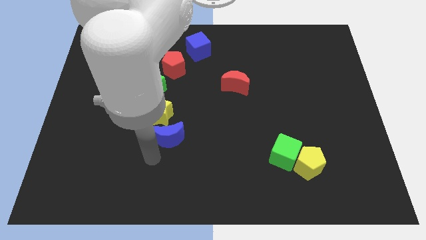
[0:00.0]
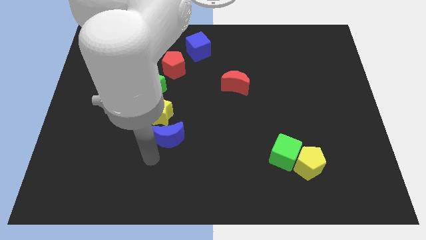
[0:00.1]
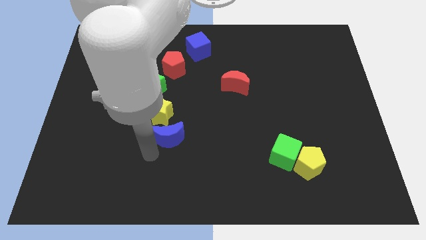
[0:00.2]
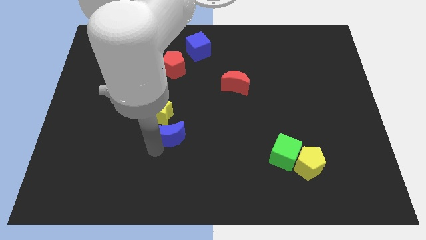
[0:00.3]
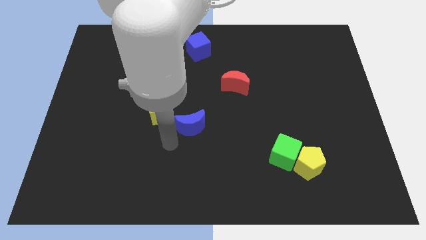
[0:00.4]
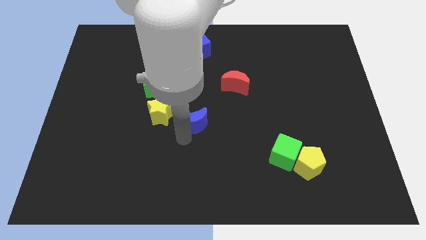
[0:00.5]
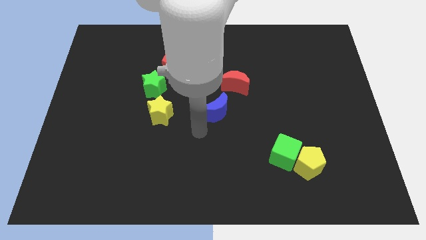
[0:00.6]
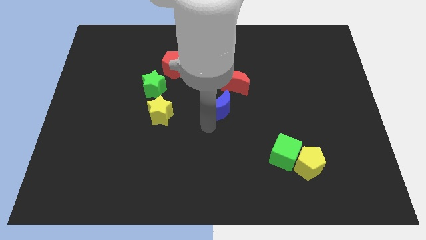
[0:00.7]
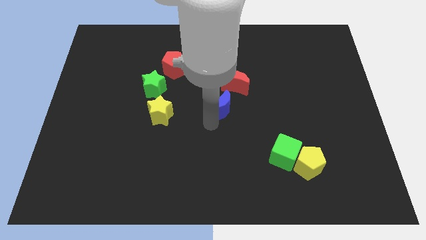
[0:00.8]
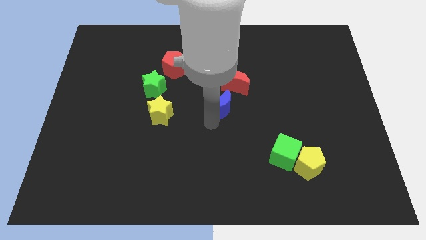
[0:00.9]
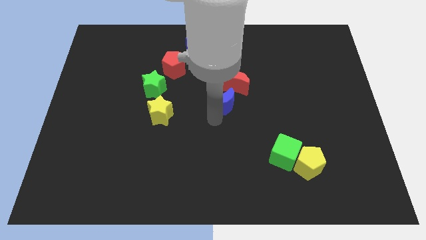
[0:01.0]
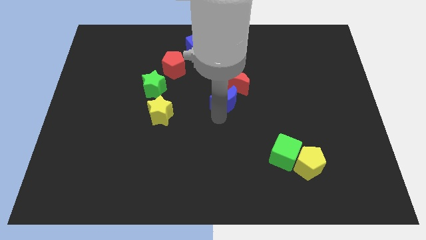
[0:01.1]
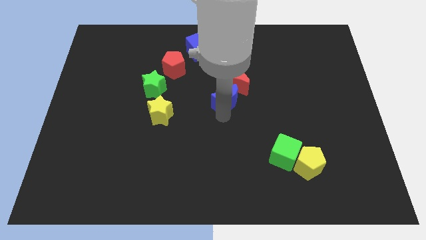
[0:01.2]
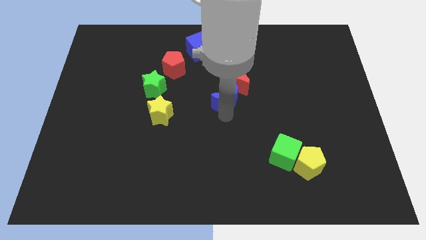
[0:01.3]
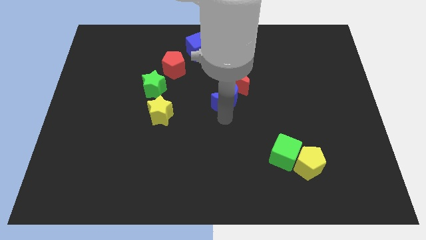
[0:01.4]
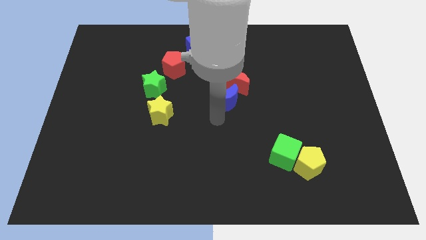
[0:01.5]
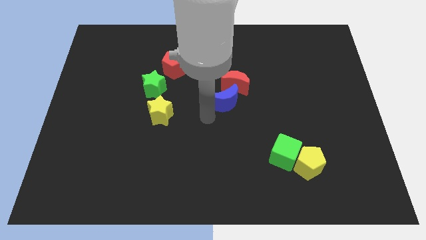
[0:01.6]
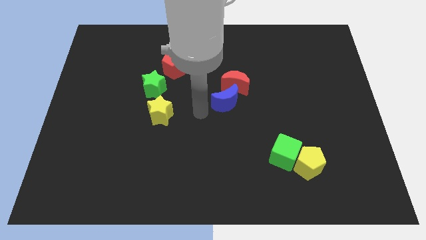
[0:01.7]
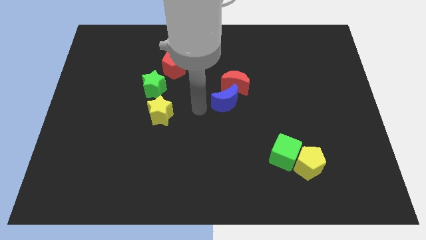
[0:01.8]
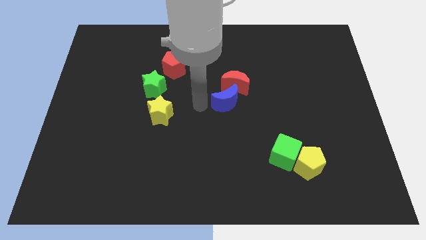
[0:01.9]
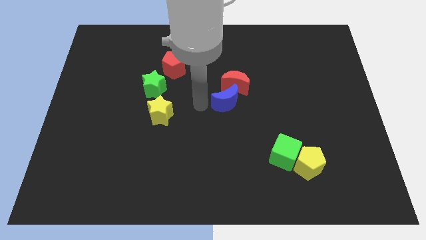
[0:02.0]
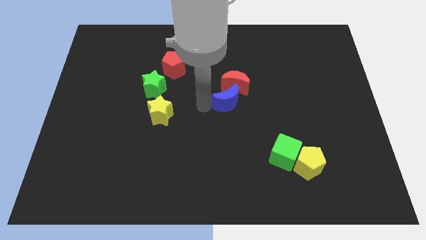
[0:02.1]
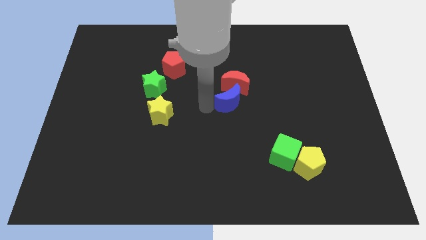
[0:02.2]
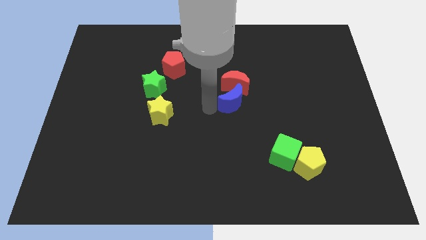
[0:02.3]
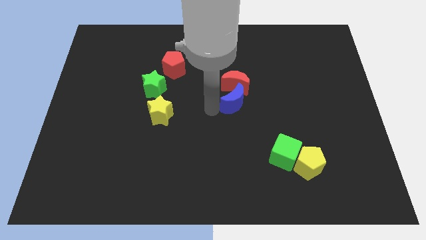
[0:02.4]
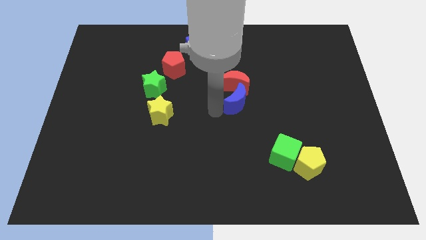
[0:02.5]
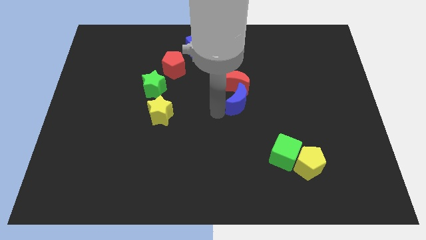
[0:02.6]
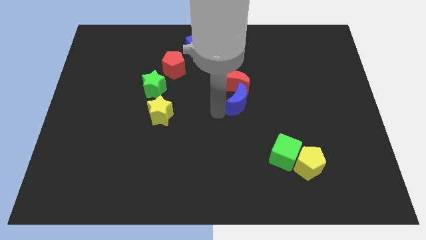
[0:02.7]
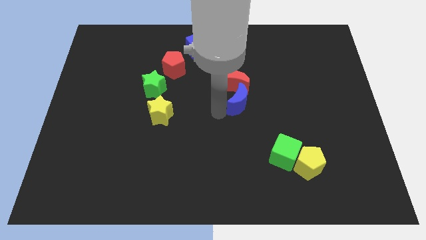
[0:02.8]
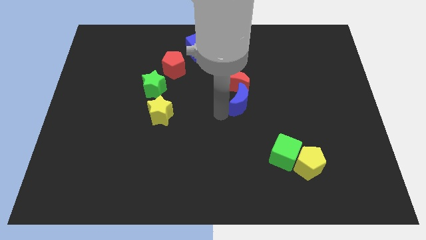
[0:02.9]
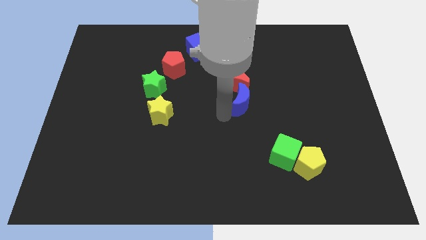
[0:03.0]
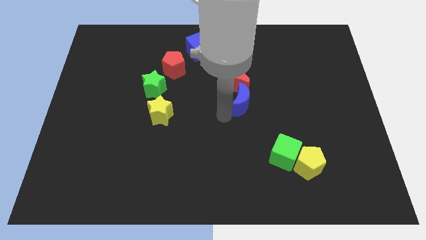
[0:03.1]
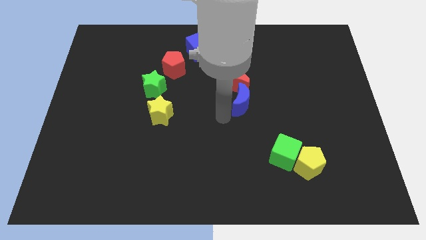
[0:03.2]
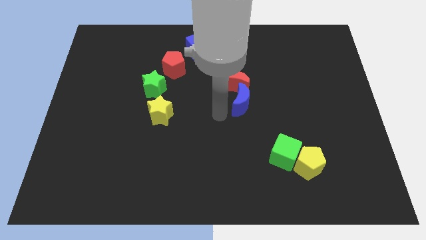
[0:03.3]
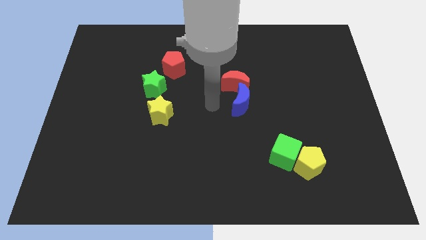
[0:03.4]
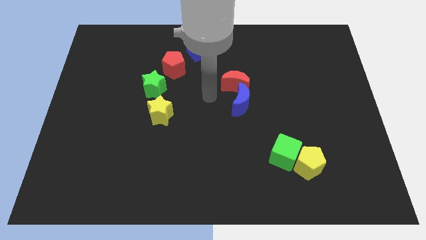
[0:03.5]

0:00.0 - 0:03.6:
place the blue crescent vertical below red moon

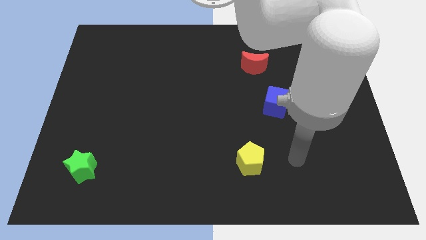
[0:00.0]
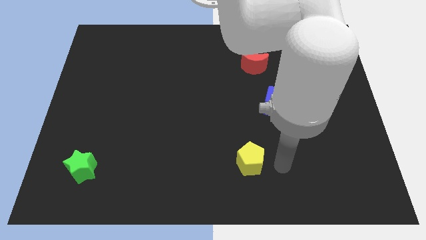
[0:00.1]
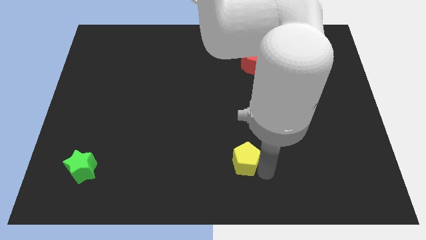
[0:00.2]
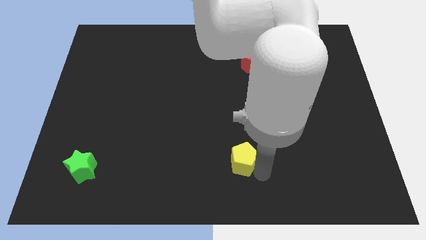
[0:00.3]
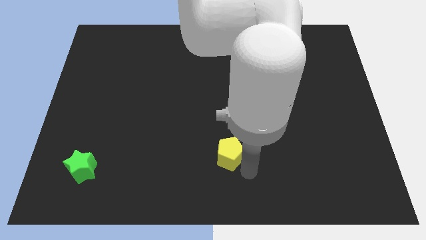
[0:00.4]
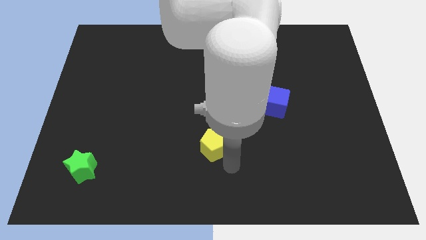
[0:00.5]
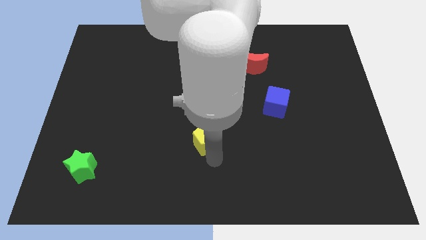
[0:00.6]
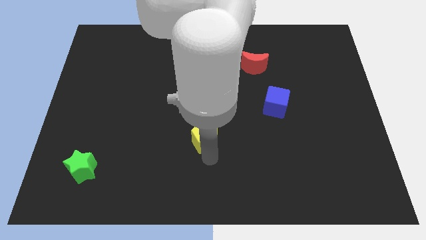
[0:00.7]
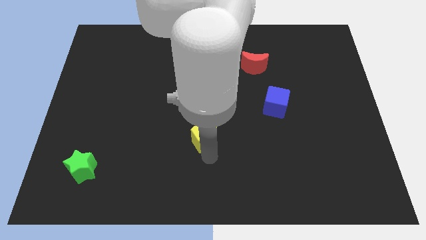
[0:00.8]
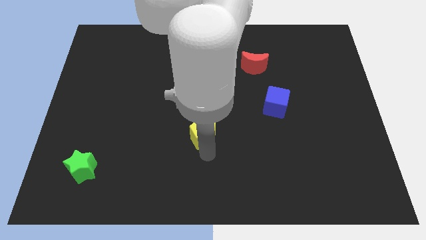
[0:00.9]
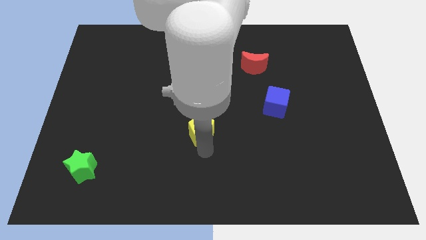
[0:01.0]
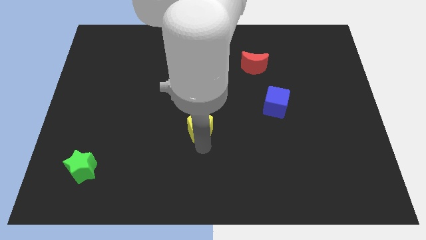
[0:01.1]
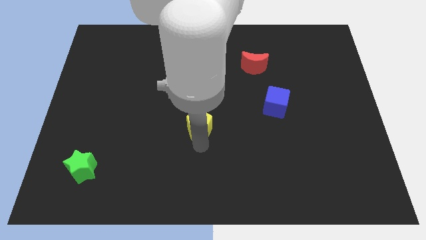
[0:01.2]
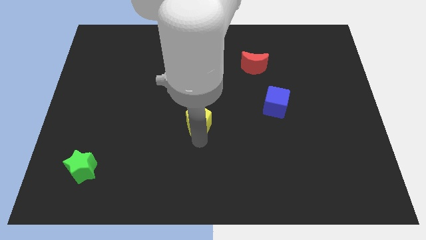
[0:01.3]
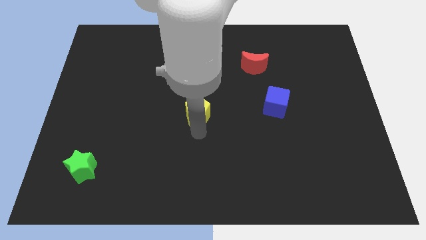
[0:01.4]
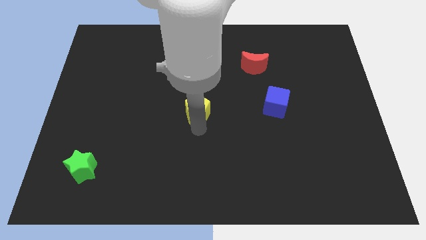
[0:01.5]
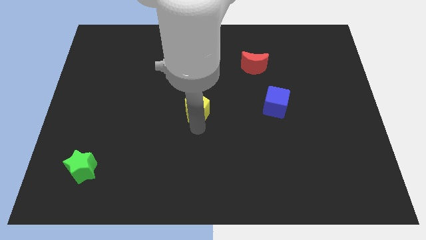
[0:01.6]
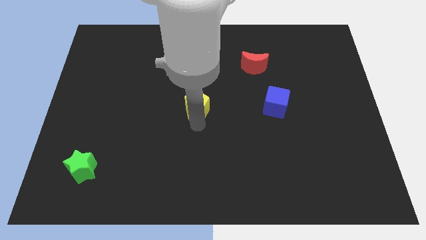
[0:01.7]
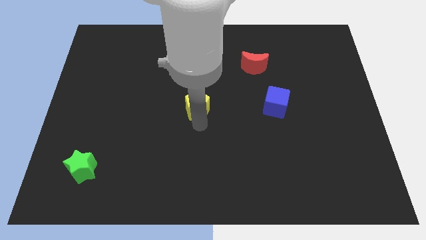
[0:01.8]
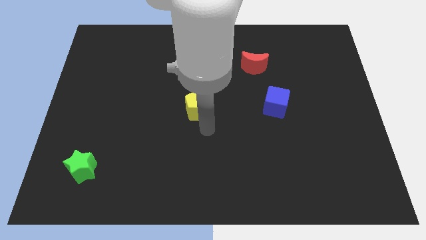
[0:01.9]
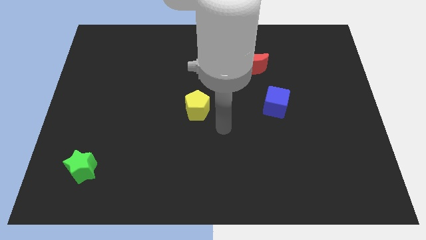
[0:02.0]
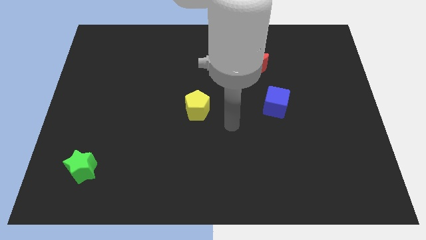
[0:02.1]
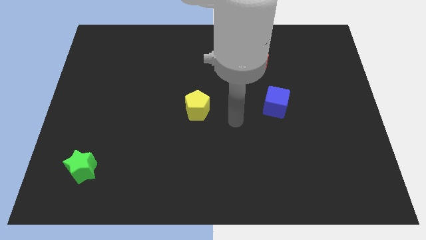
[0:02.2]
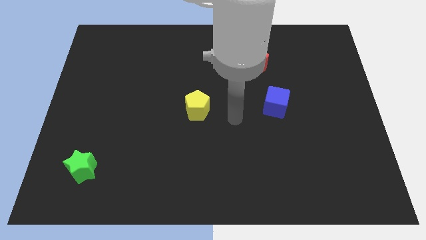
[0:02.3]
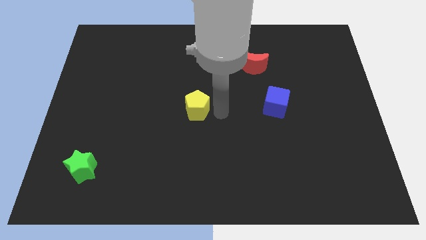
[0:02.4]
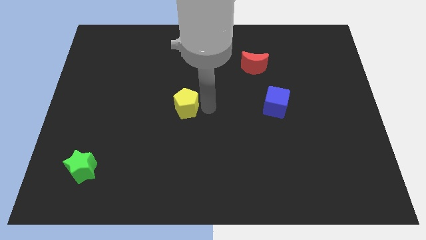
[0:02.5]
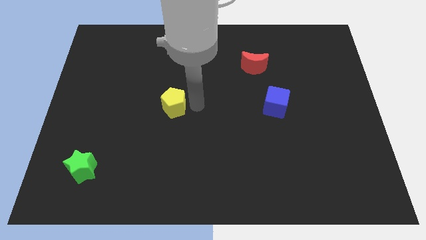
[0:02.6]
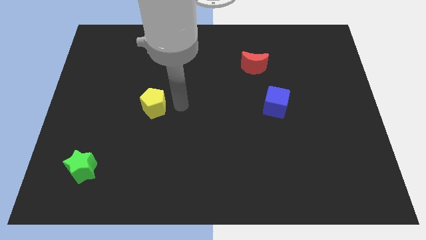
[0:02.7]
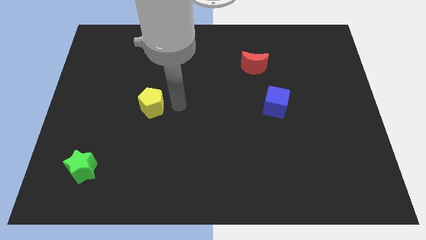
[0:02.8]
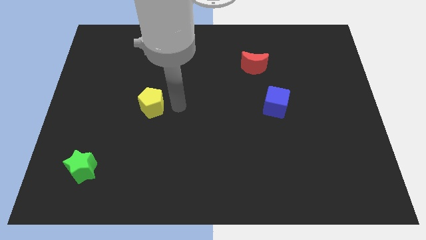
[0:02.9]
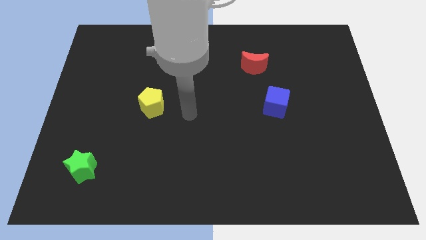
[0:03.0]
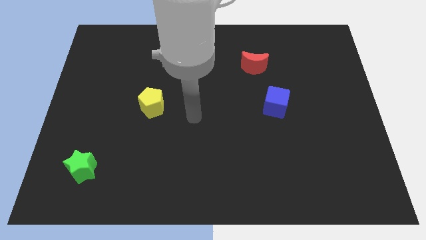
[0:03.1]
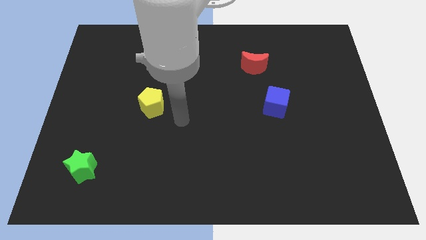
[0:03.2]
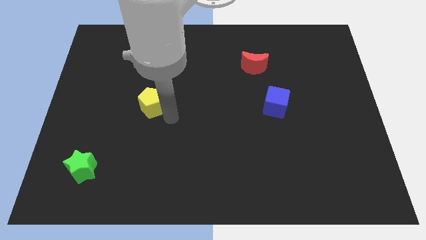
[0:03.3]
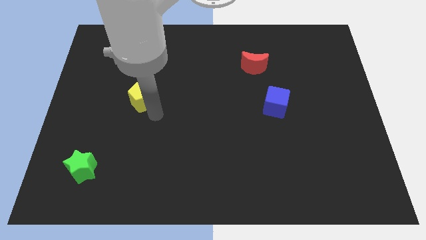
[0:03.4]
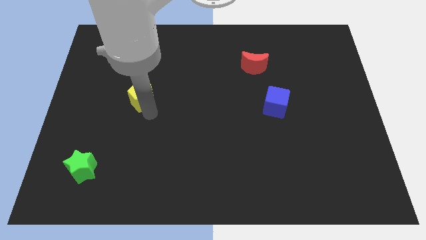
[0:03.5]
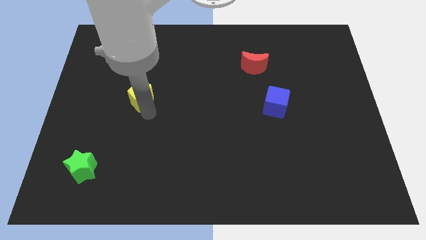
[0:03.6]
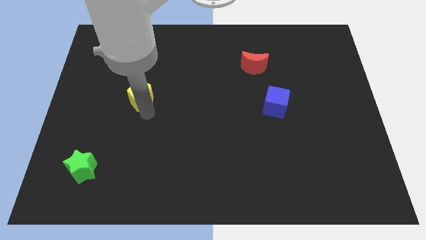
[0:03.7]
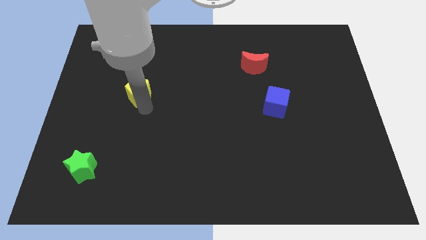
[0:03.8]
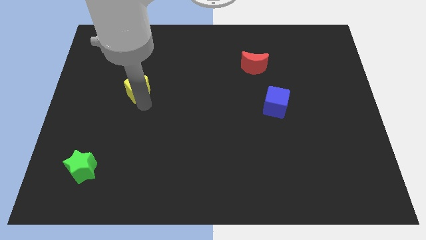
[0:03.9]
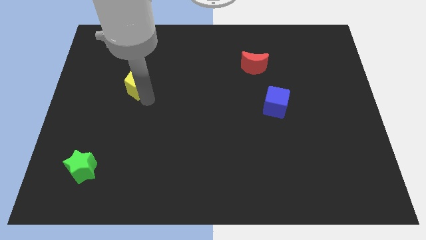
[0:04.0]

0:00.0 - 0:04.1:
drag the yellow pentagon to the left

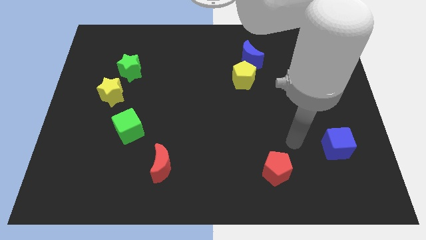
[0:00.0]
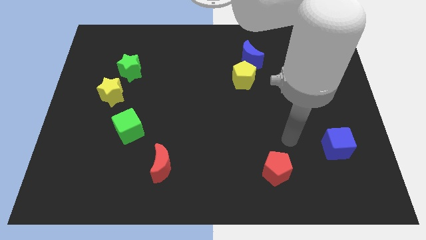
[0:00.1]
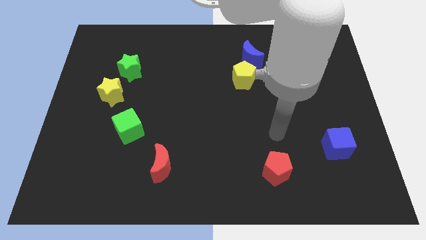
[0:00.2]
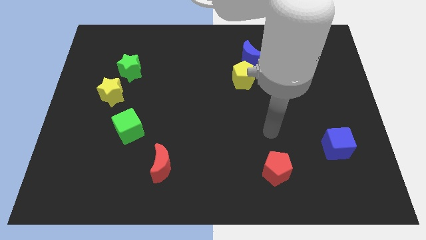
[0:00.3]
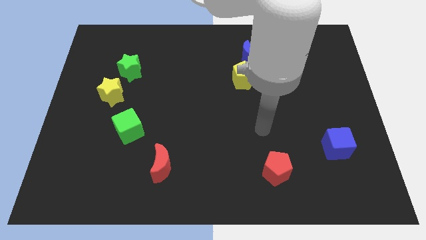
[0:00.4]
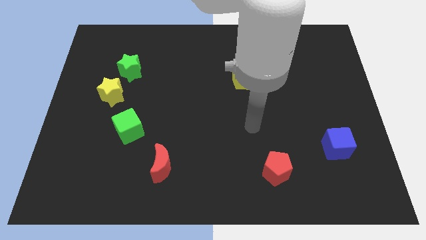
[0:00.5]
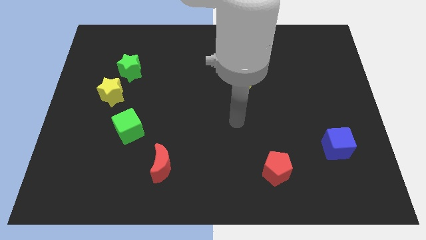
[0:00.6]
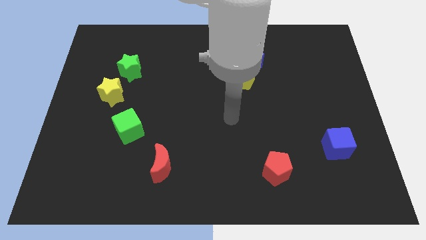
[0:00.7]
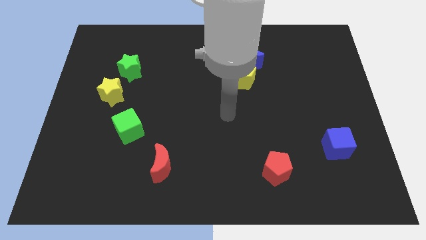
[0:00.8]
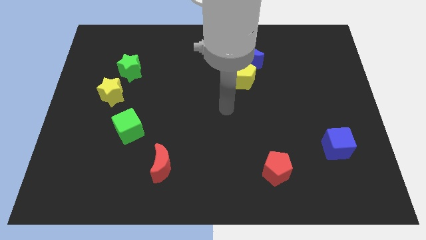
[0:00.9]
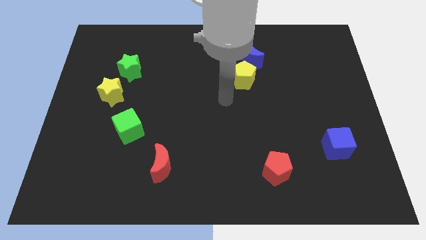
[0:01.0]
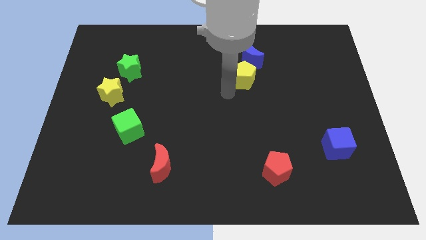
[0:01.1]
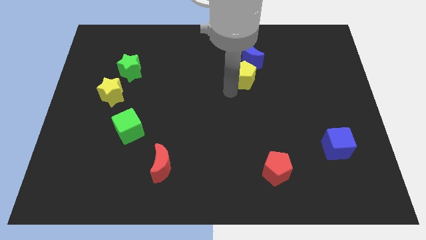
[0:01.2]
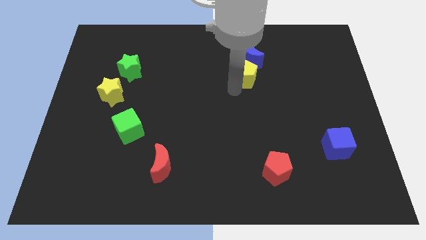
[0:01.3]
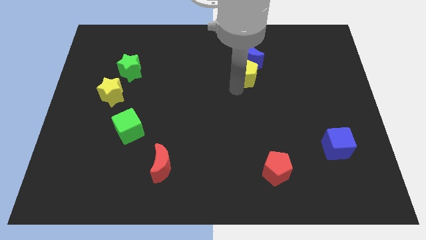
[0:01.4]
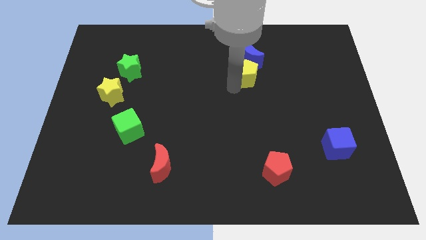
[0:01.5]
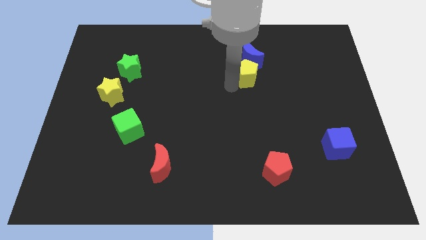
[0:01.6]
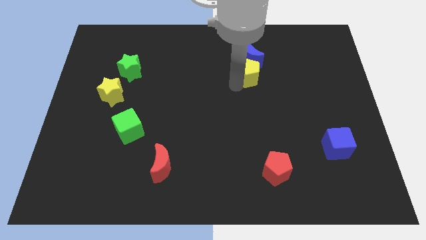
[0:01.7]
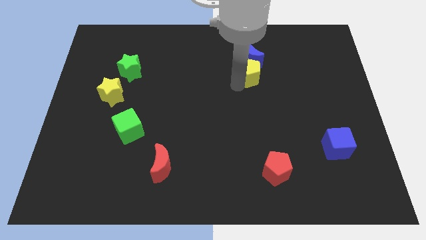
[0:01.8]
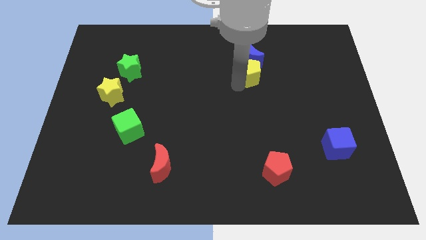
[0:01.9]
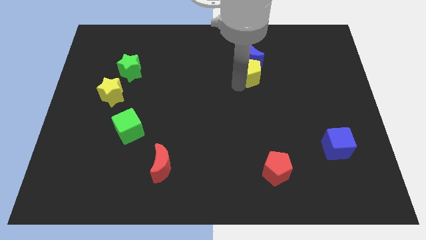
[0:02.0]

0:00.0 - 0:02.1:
move the yellow pentagon close to the blue moon
